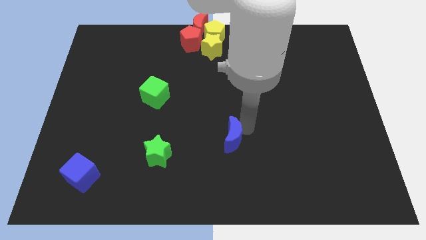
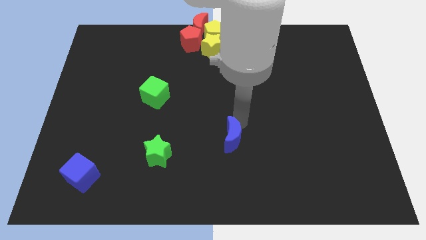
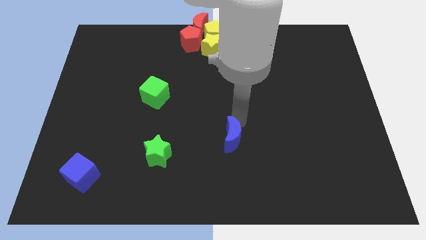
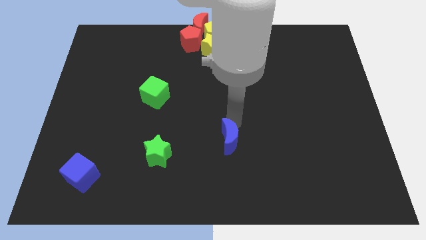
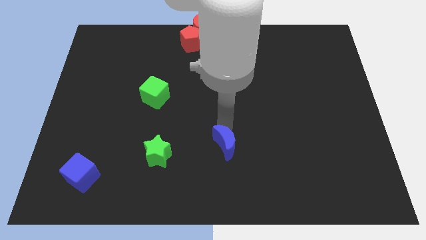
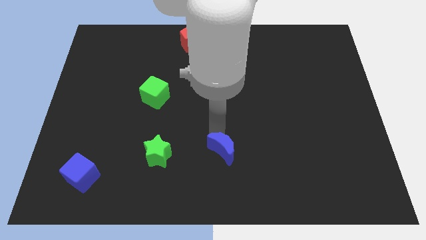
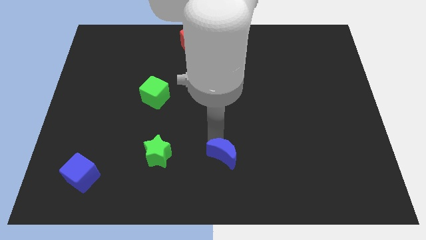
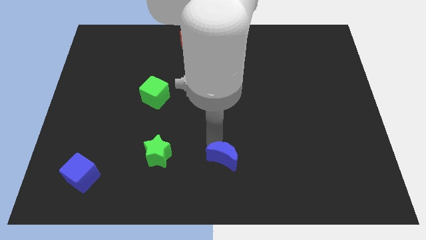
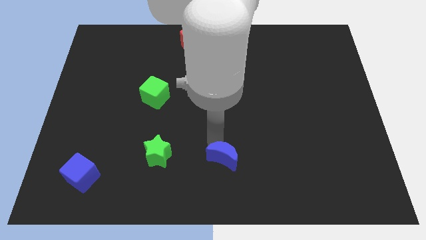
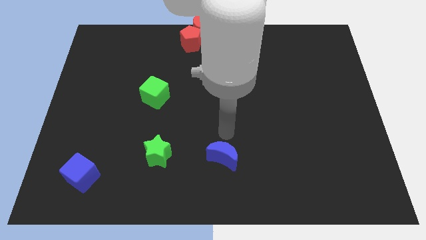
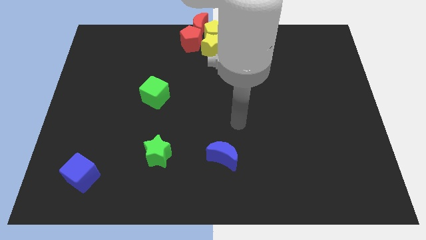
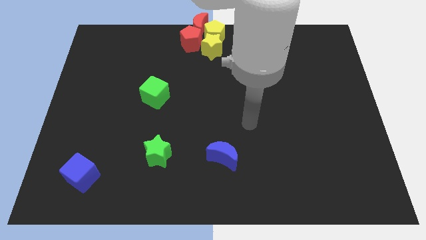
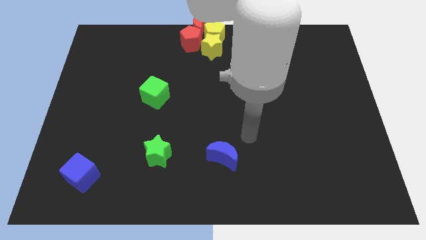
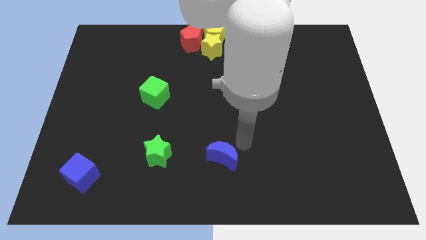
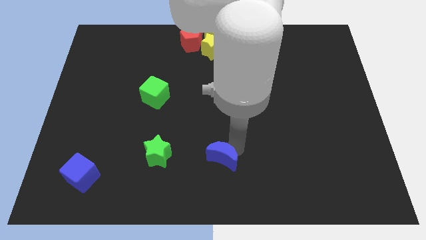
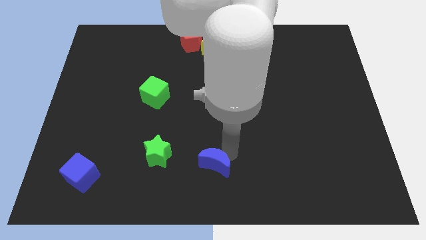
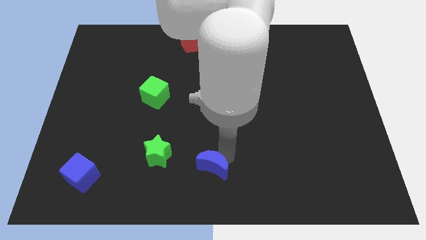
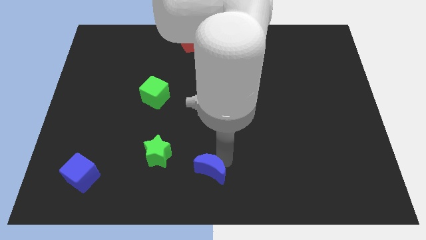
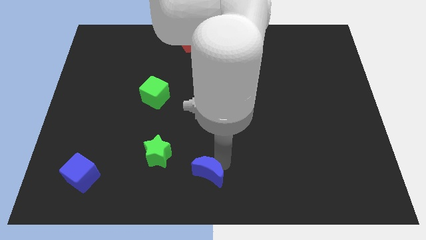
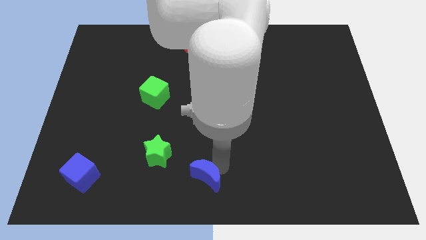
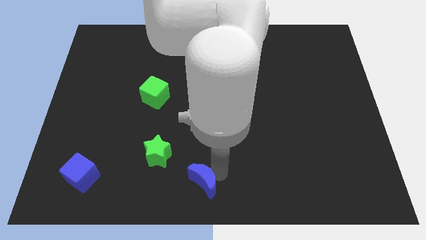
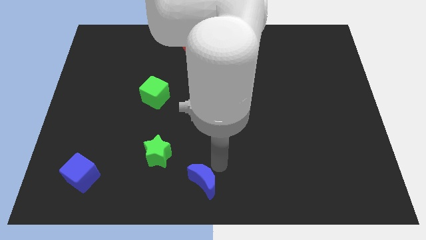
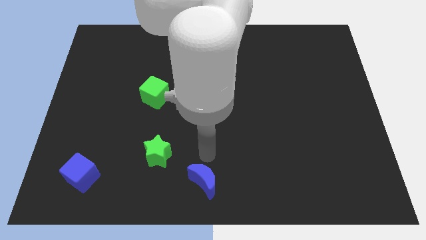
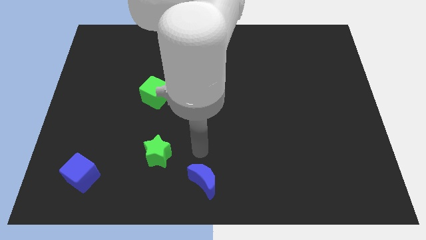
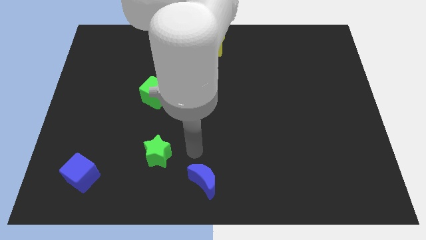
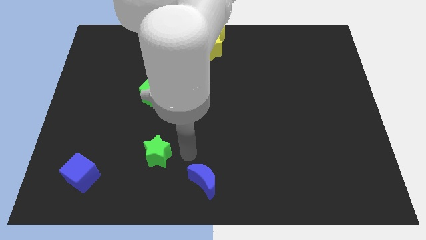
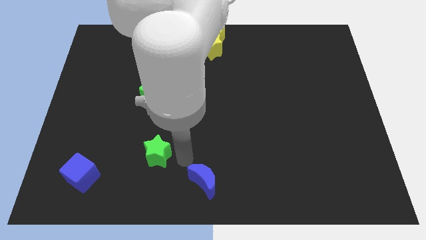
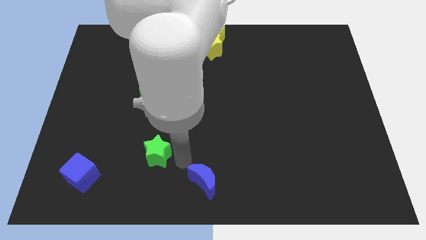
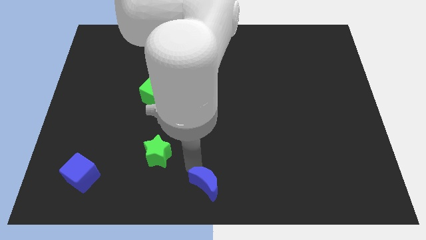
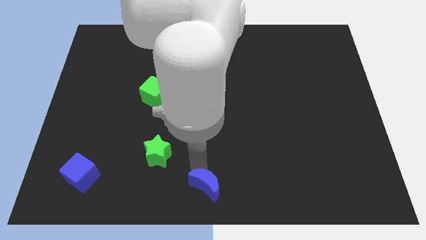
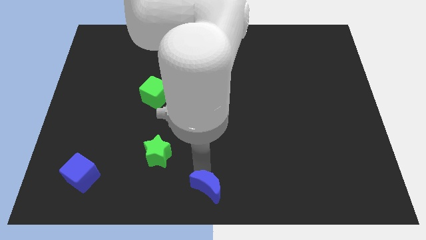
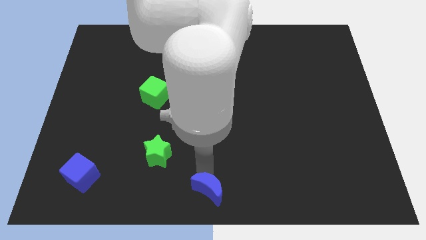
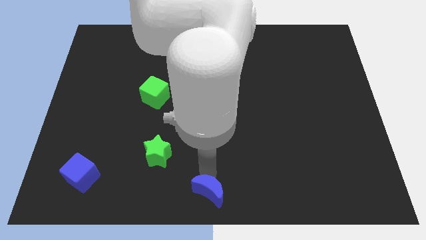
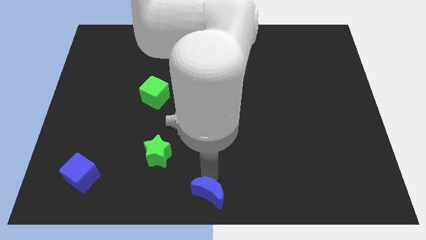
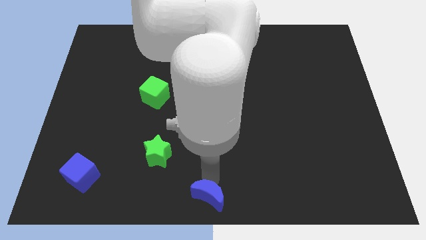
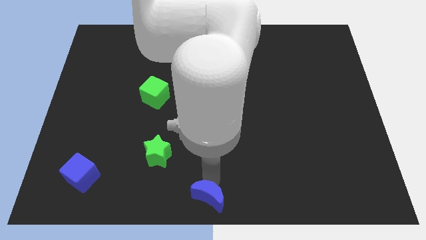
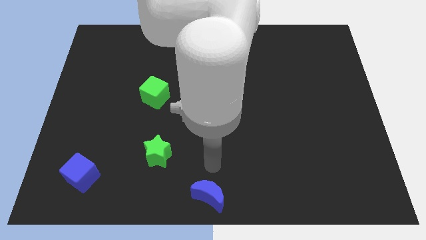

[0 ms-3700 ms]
push the blue moon to the bottom middle of the board

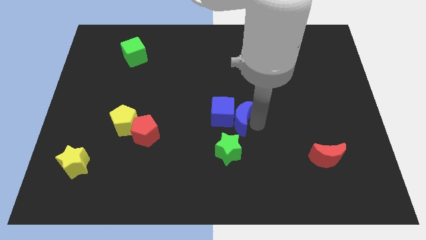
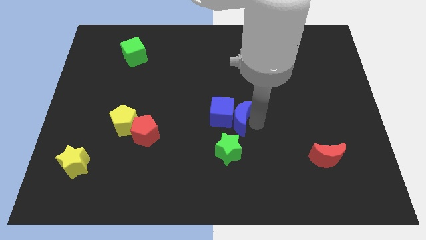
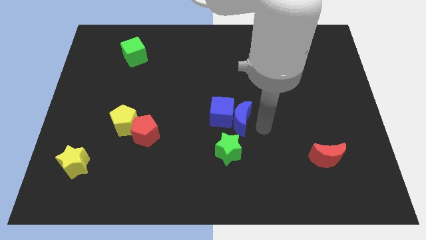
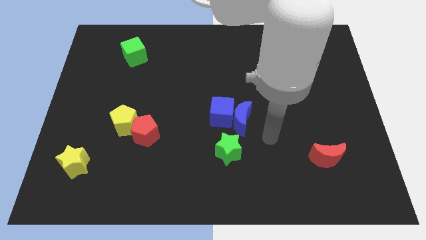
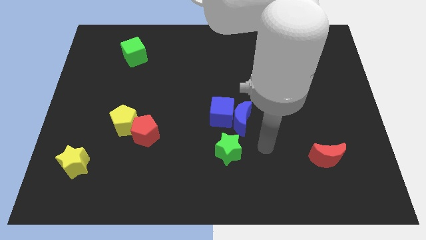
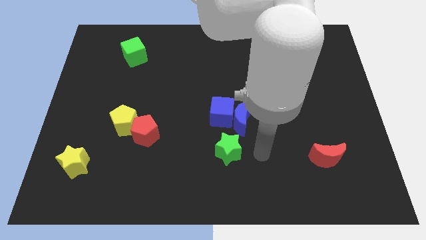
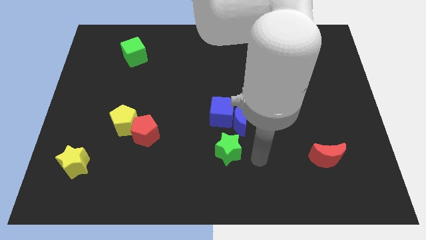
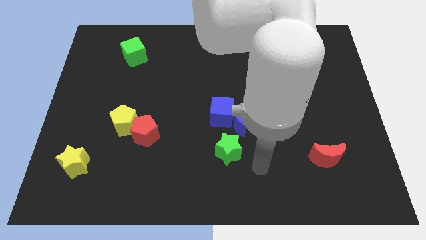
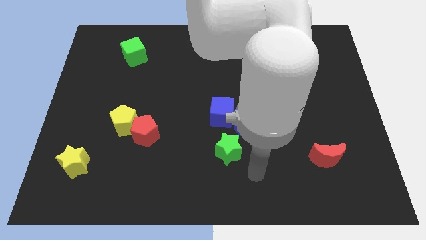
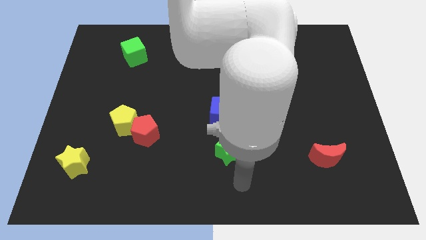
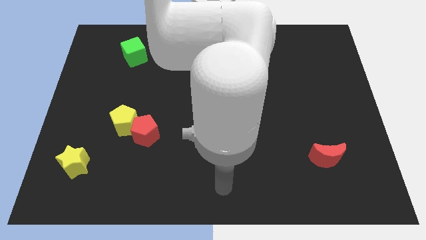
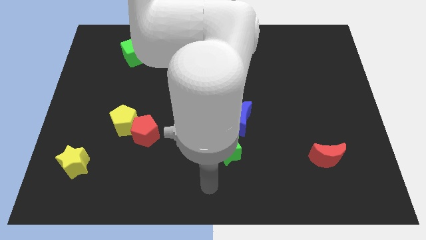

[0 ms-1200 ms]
point your arm at the bottom of the green star

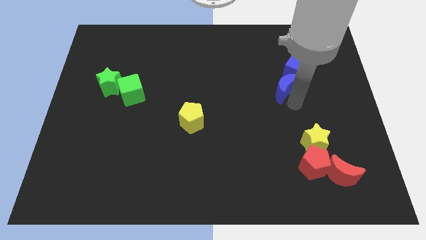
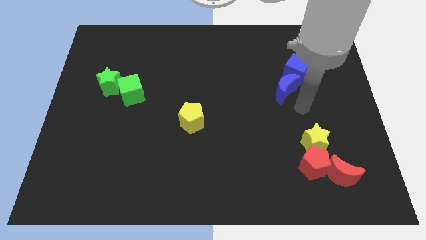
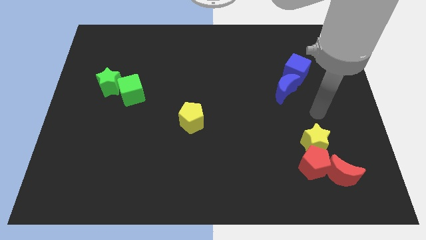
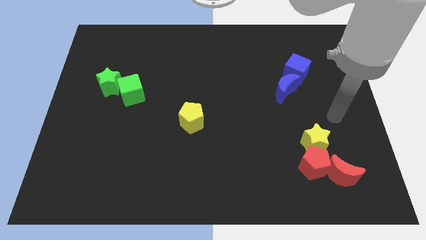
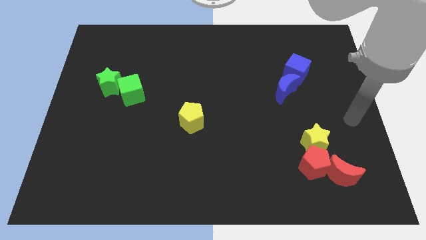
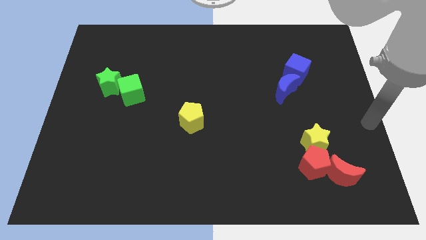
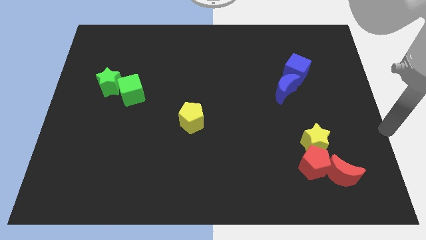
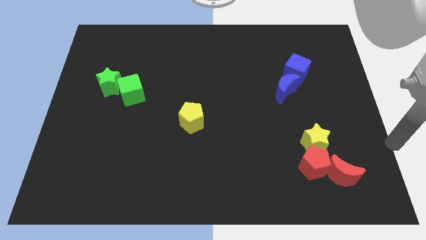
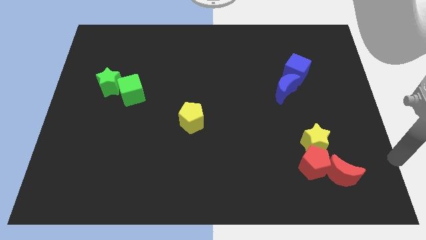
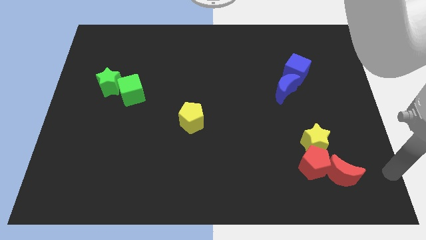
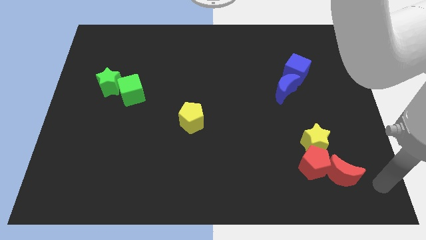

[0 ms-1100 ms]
point your arm at the right of the red crescent

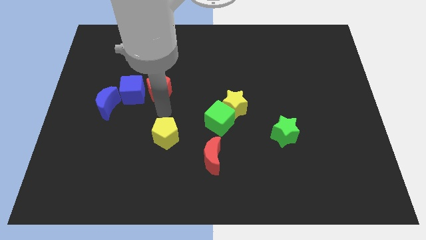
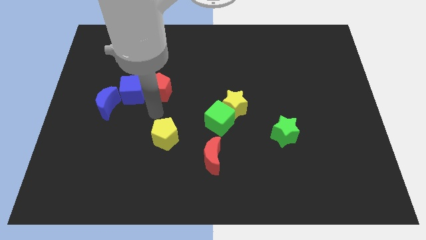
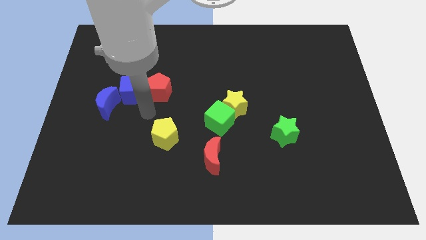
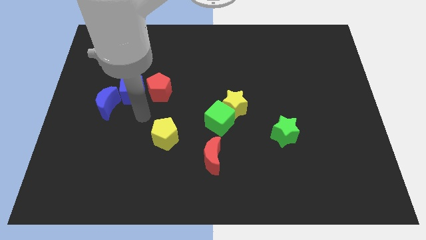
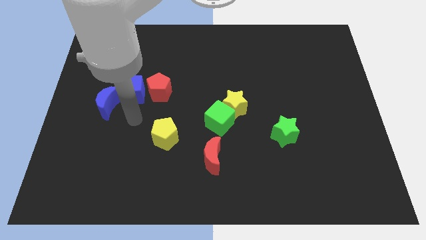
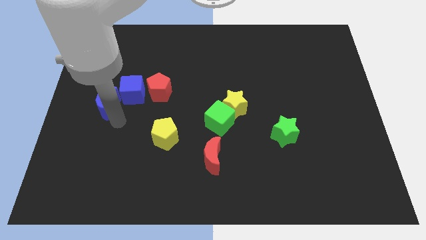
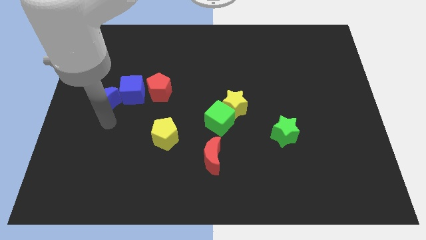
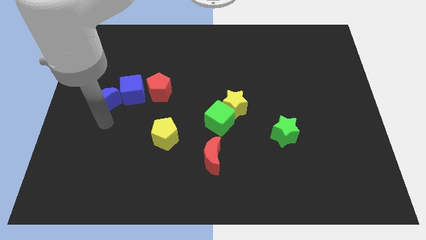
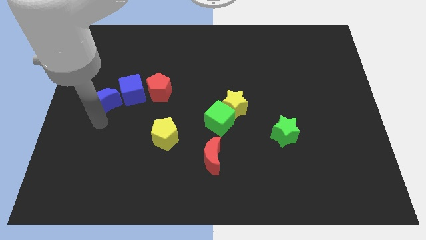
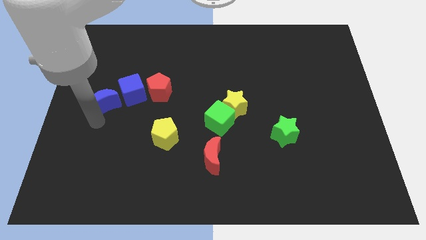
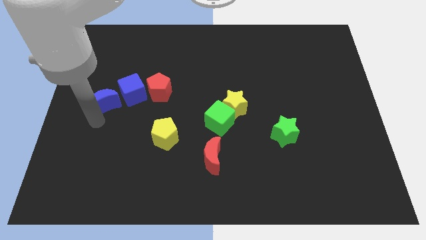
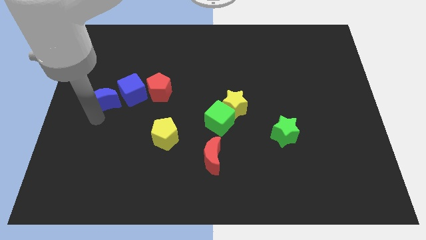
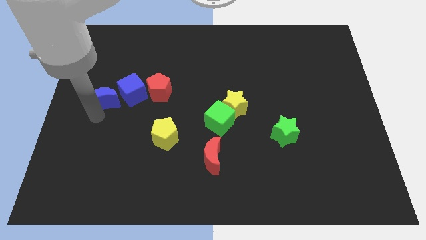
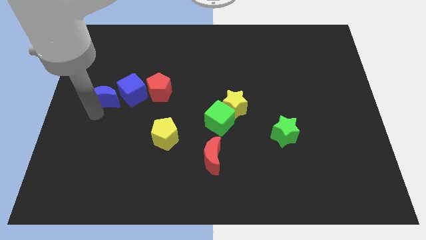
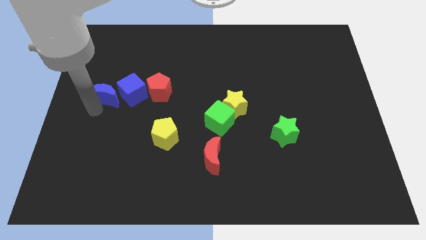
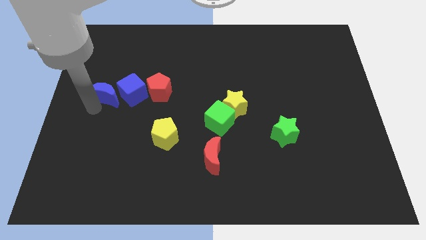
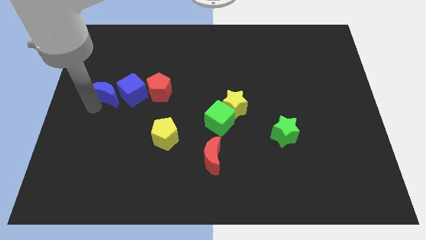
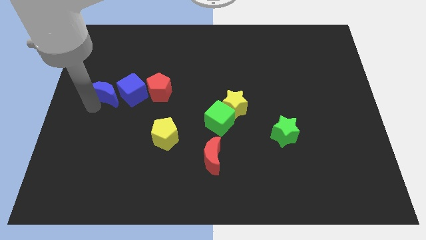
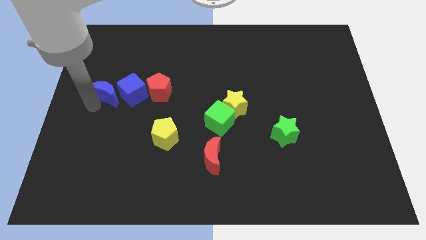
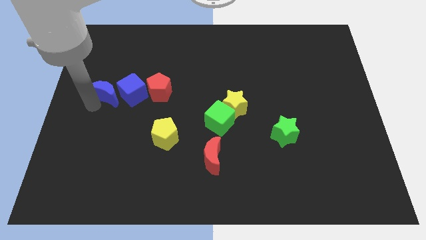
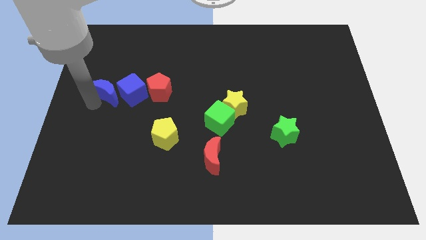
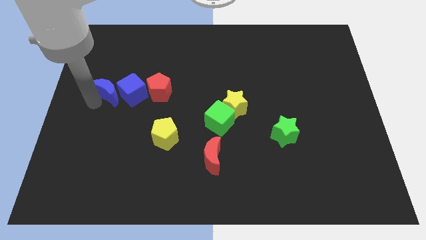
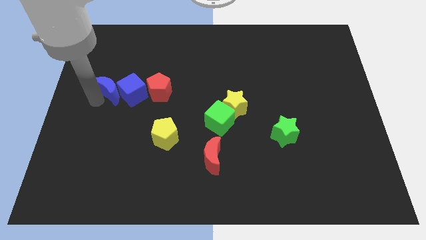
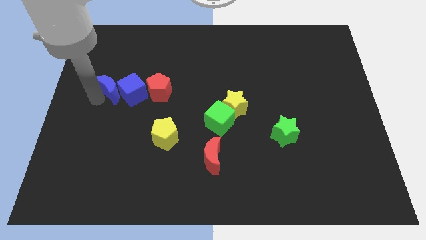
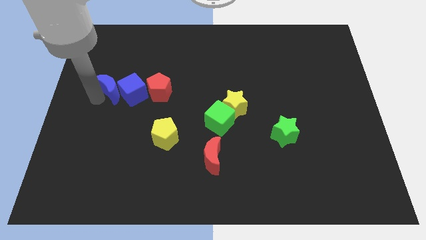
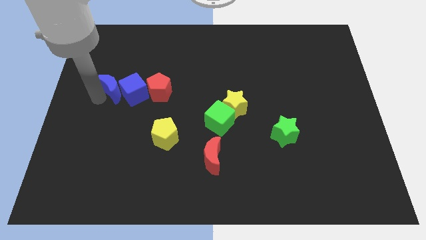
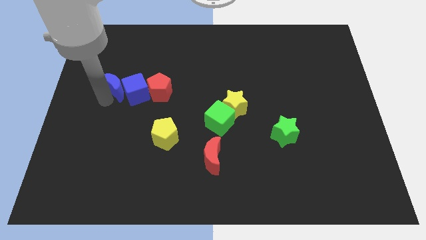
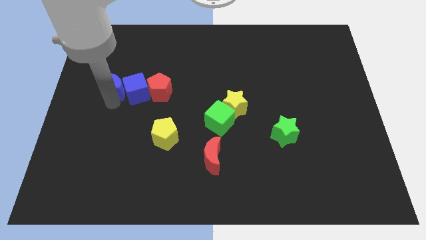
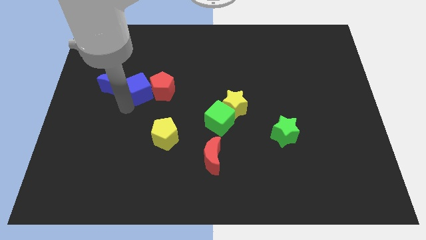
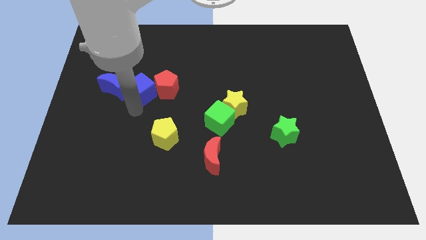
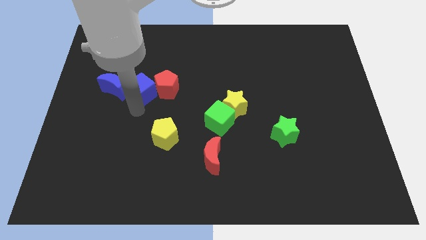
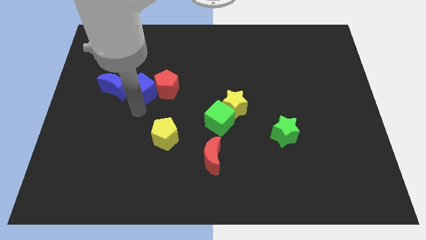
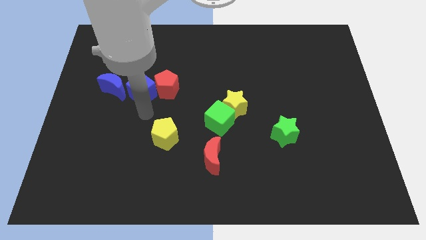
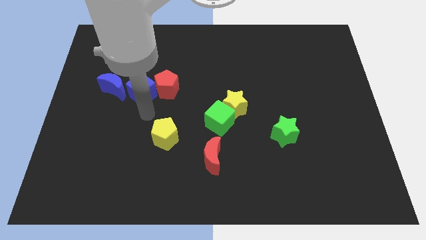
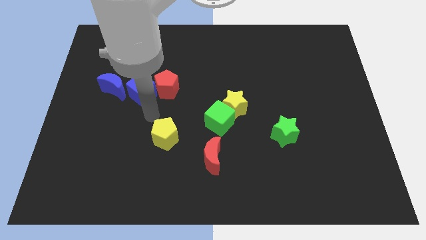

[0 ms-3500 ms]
drag the blue moon slightly upwards
